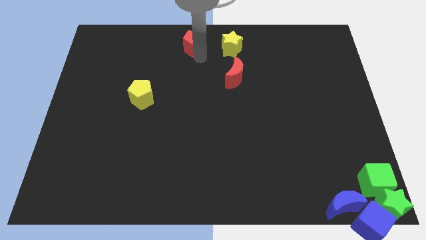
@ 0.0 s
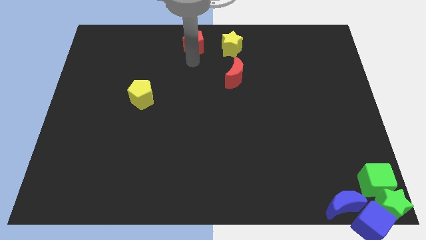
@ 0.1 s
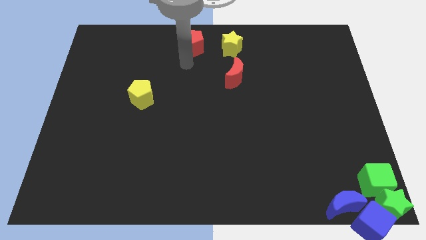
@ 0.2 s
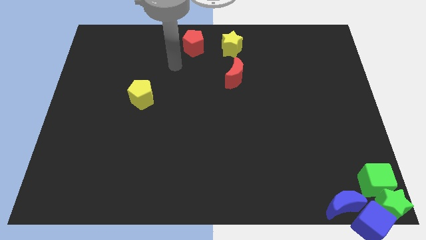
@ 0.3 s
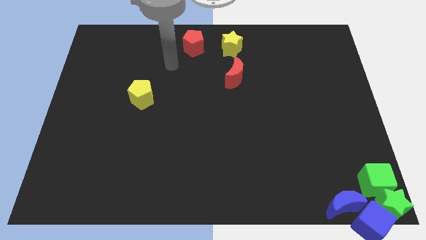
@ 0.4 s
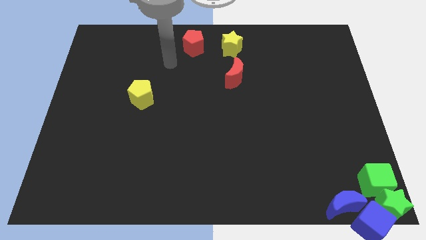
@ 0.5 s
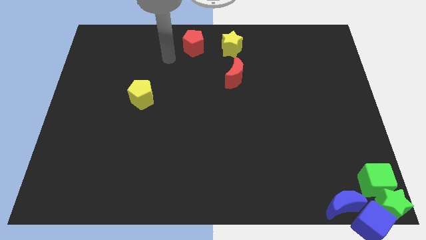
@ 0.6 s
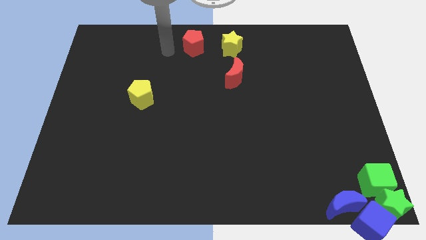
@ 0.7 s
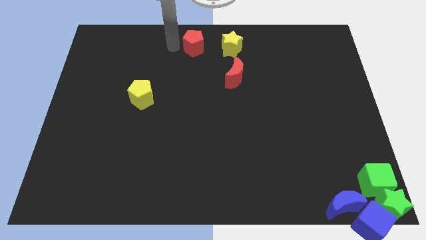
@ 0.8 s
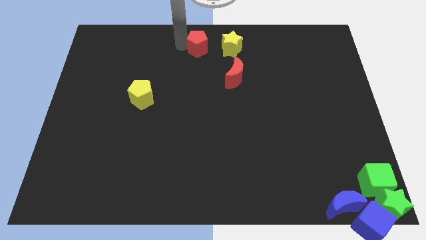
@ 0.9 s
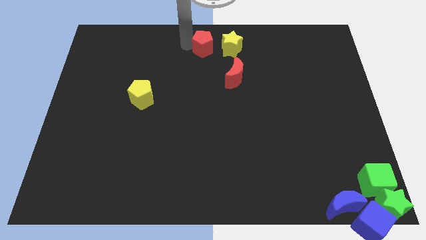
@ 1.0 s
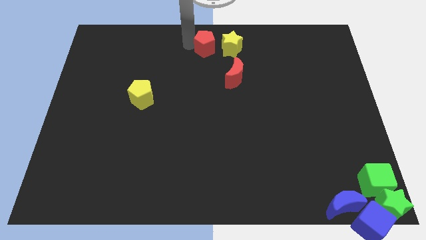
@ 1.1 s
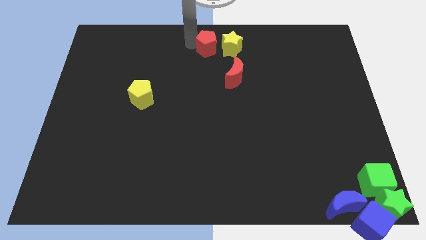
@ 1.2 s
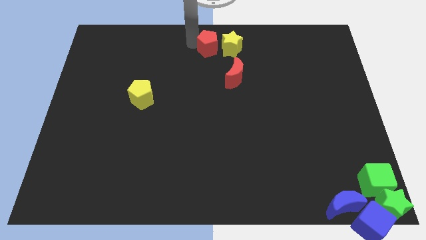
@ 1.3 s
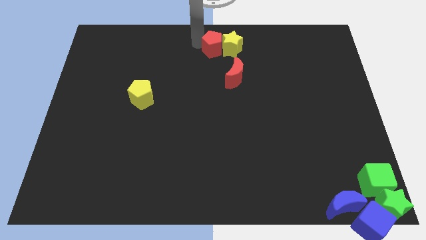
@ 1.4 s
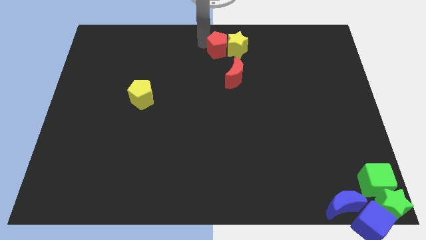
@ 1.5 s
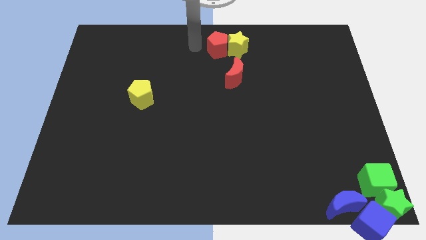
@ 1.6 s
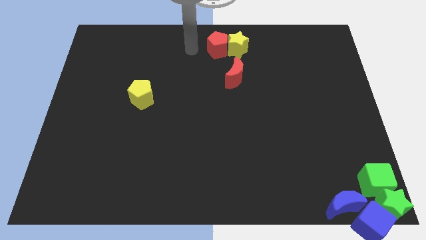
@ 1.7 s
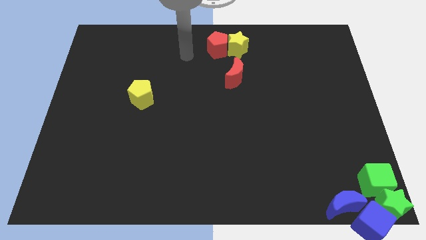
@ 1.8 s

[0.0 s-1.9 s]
push the red pentagon into yellow star

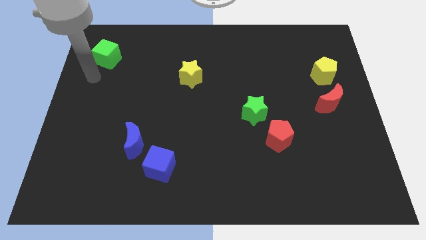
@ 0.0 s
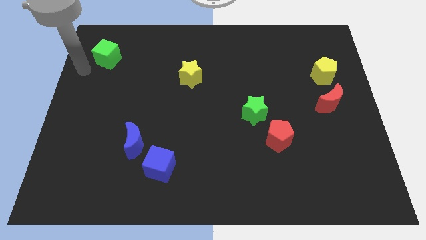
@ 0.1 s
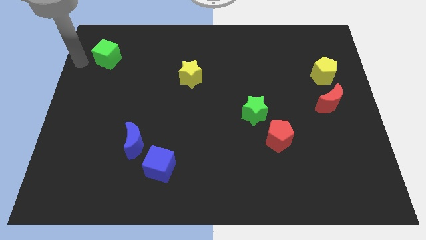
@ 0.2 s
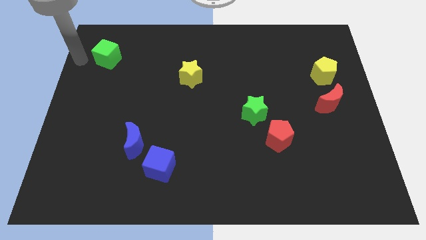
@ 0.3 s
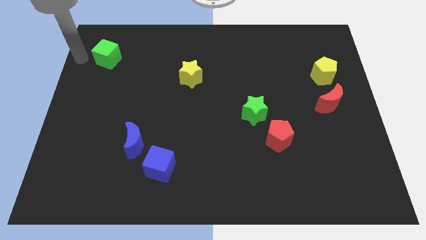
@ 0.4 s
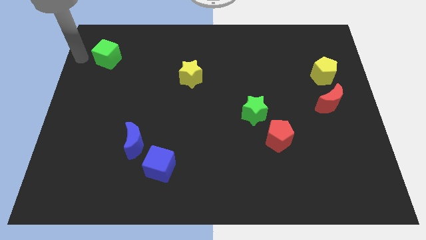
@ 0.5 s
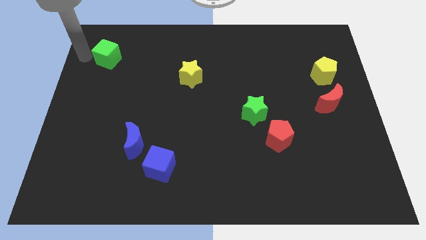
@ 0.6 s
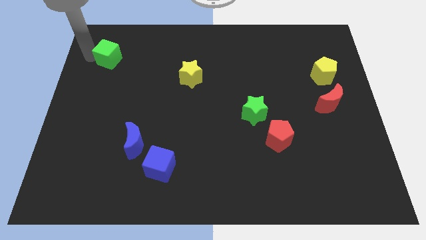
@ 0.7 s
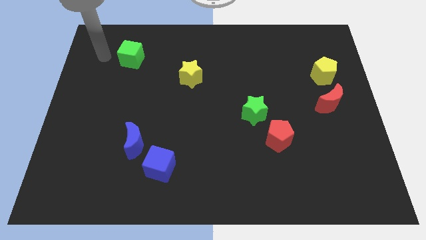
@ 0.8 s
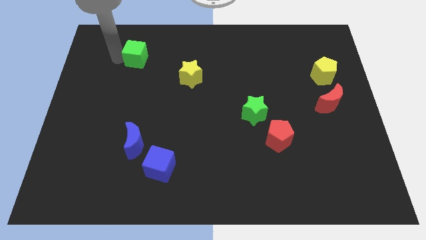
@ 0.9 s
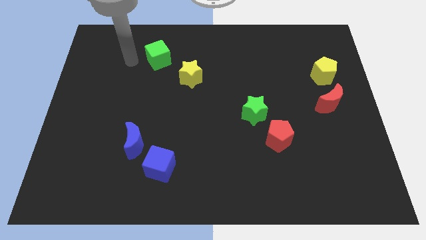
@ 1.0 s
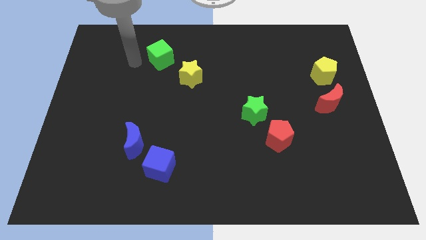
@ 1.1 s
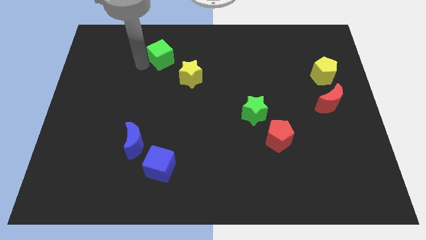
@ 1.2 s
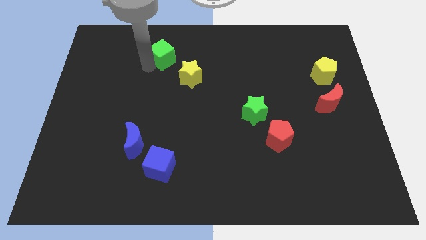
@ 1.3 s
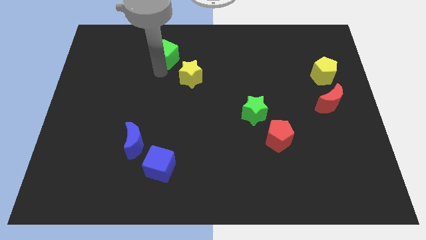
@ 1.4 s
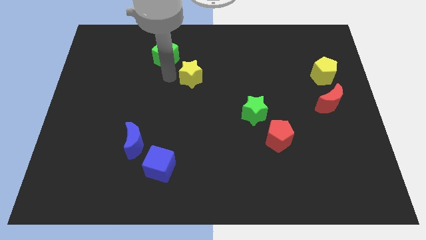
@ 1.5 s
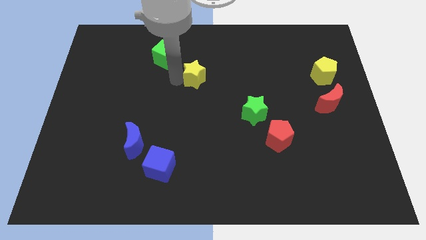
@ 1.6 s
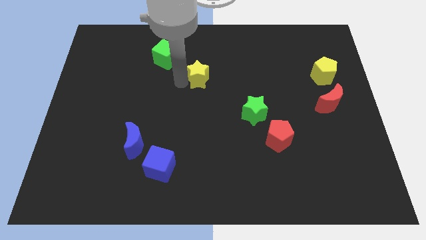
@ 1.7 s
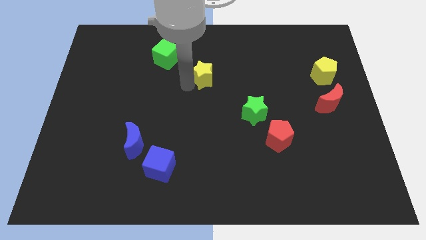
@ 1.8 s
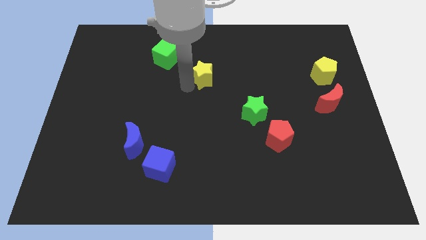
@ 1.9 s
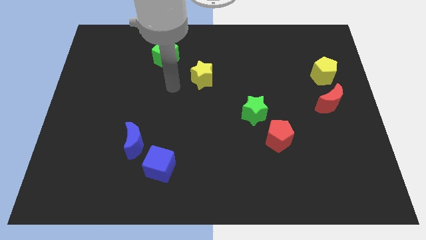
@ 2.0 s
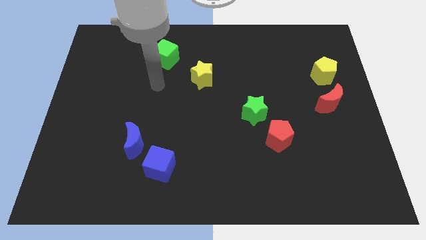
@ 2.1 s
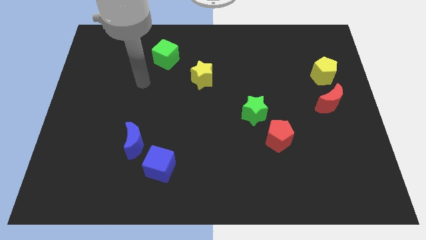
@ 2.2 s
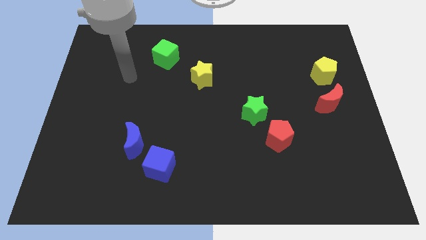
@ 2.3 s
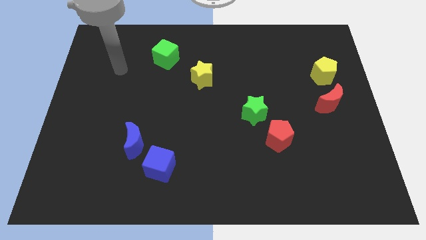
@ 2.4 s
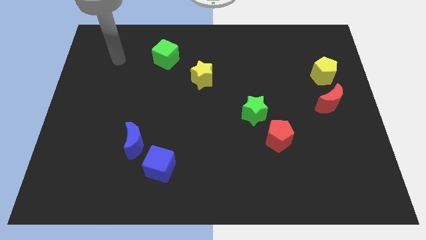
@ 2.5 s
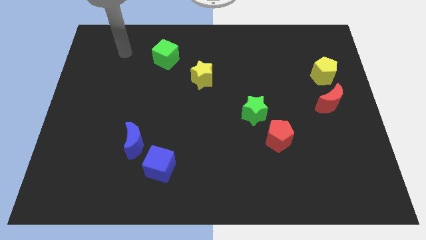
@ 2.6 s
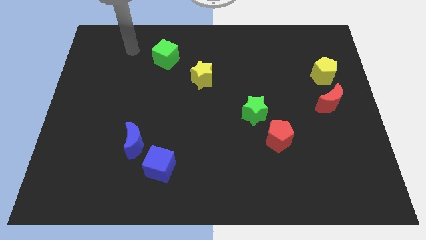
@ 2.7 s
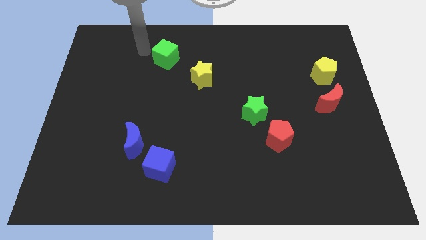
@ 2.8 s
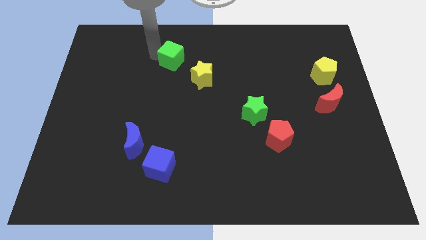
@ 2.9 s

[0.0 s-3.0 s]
push green cube near to the yellow star

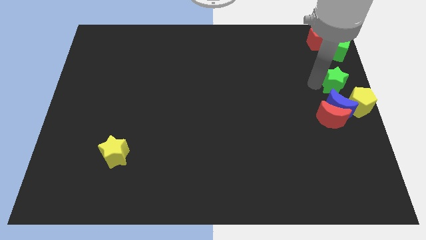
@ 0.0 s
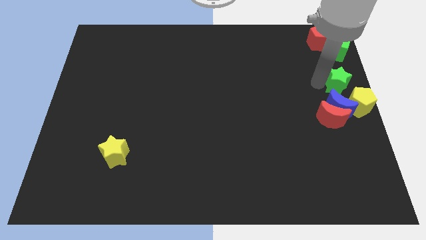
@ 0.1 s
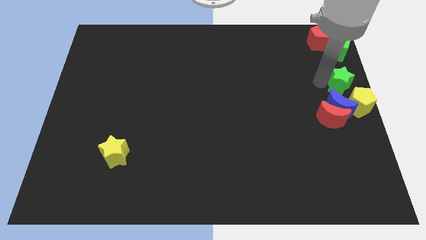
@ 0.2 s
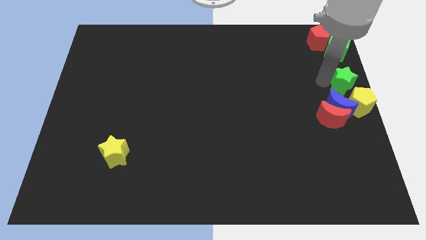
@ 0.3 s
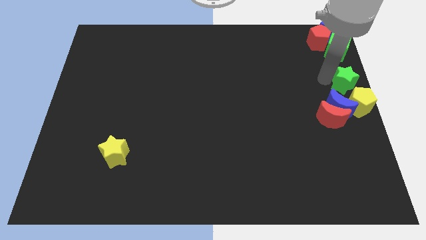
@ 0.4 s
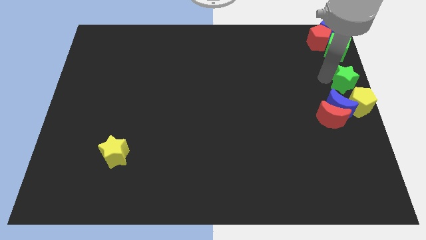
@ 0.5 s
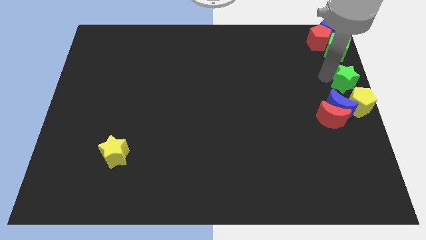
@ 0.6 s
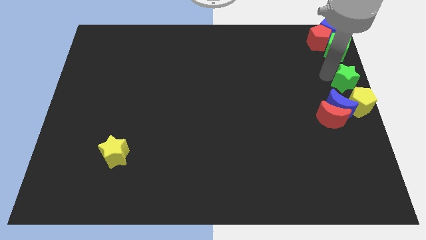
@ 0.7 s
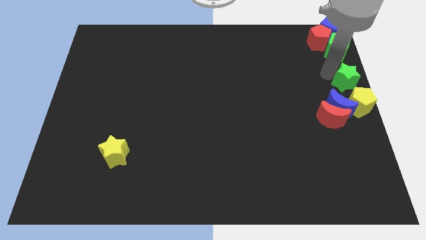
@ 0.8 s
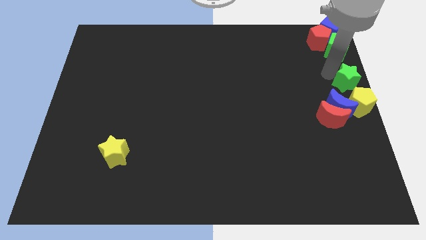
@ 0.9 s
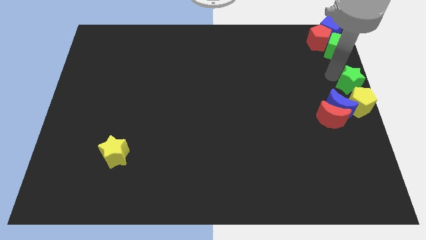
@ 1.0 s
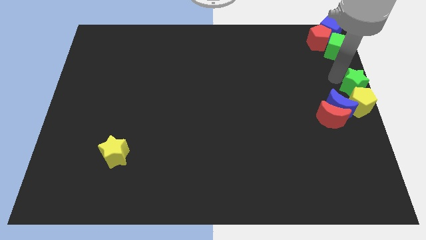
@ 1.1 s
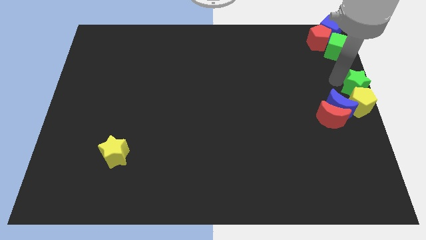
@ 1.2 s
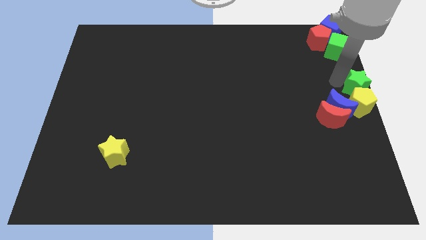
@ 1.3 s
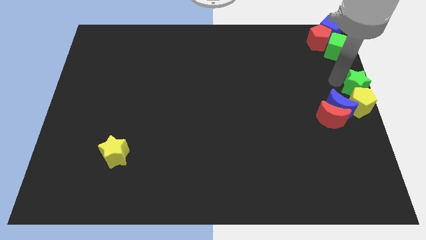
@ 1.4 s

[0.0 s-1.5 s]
place the green star on top of the yellow pentagon

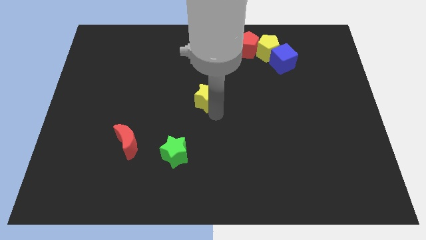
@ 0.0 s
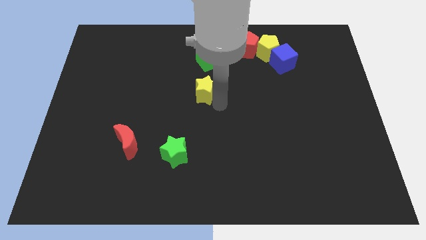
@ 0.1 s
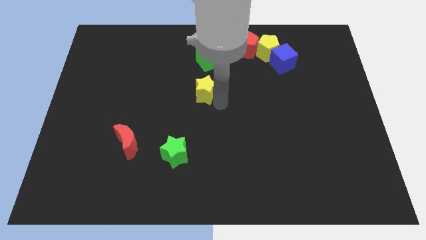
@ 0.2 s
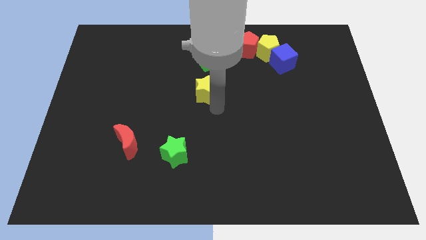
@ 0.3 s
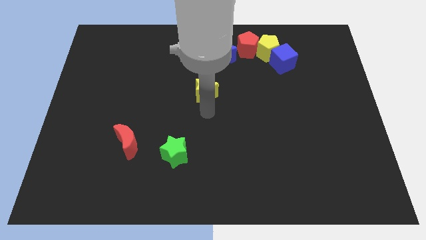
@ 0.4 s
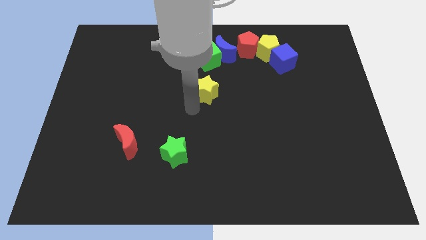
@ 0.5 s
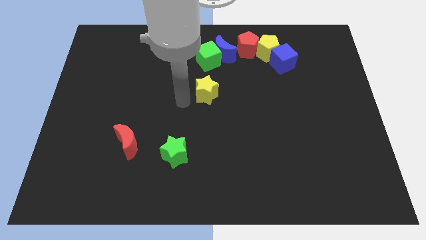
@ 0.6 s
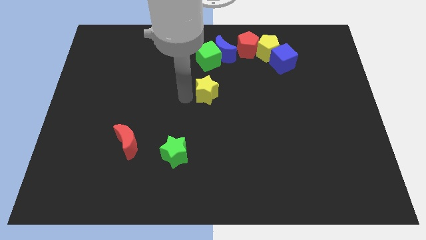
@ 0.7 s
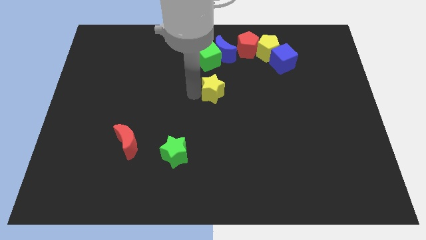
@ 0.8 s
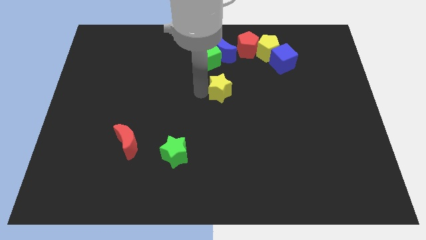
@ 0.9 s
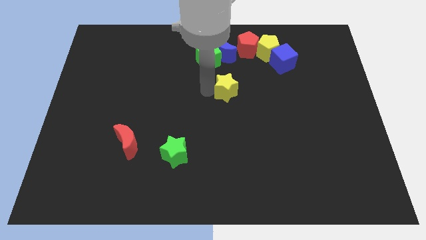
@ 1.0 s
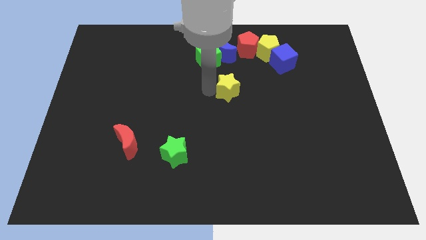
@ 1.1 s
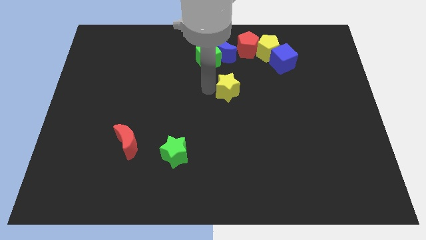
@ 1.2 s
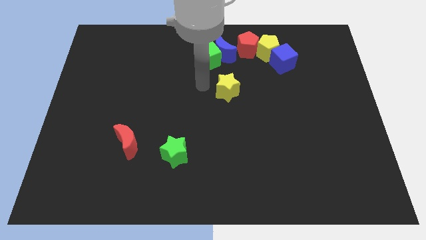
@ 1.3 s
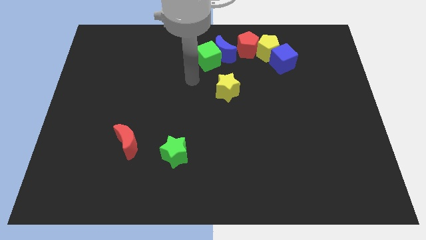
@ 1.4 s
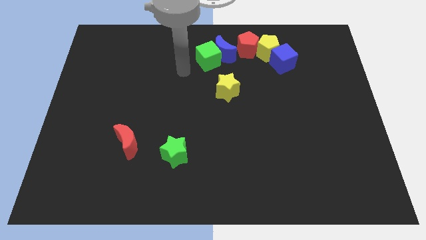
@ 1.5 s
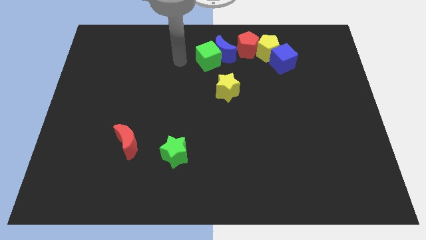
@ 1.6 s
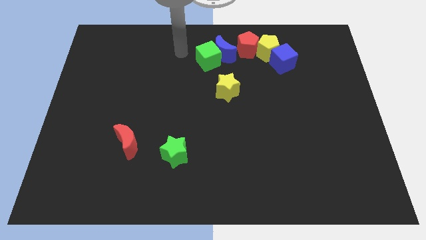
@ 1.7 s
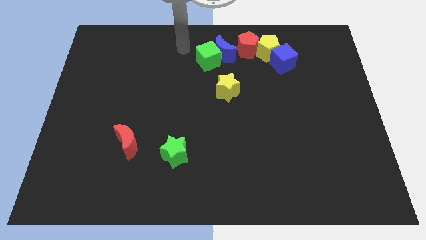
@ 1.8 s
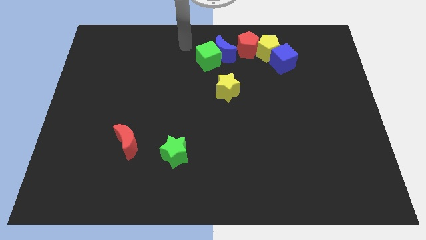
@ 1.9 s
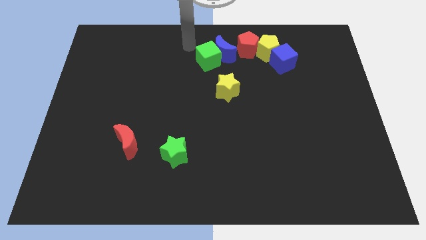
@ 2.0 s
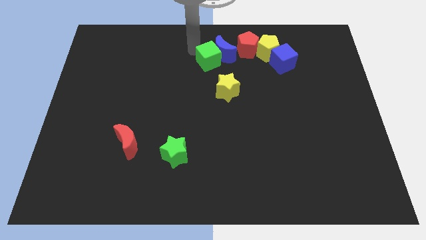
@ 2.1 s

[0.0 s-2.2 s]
move the yellow star diagonal to the green cube

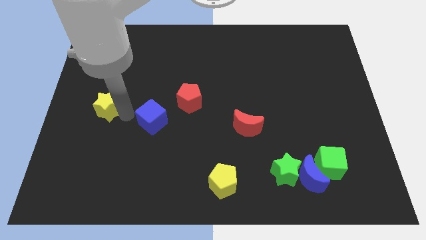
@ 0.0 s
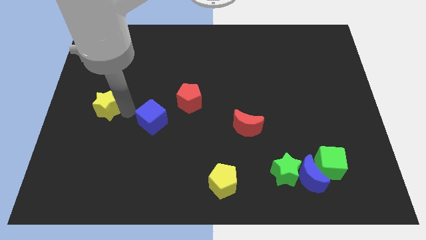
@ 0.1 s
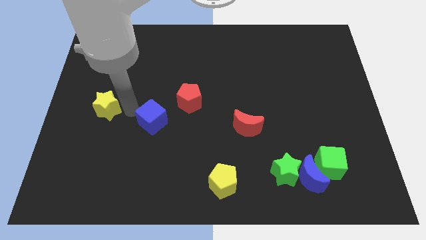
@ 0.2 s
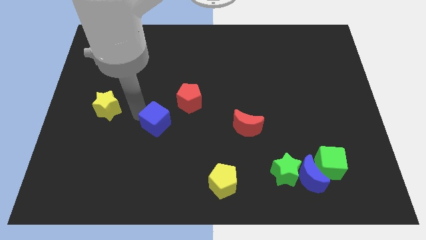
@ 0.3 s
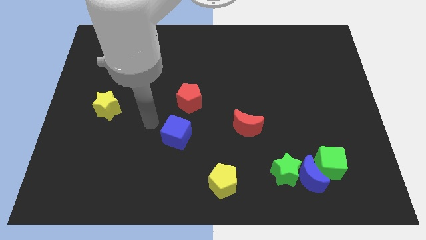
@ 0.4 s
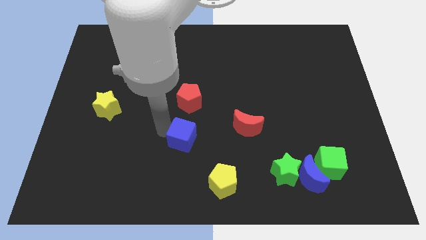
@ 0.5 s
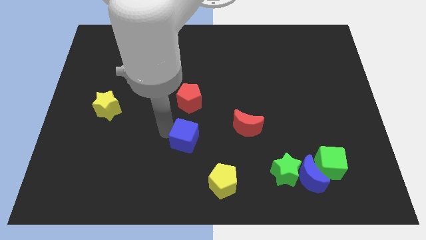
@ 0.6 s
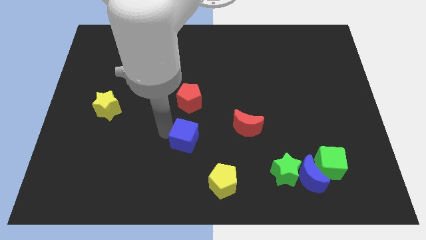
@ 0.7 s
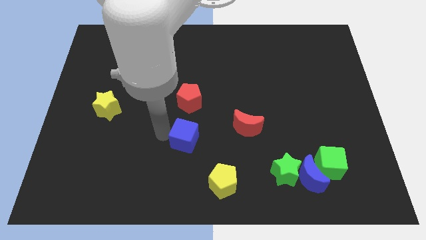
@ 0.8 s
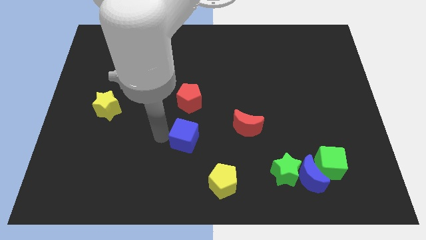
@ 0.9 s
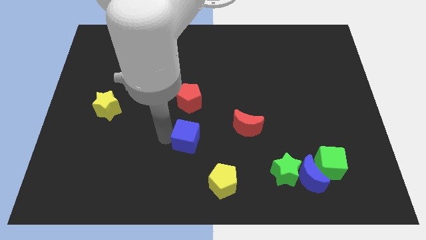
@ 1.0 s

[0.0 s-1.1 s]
move blue cube to the bottom of red pentagon
